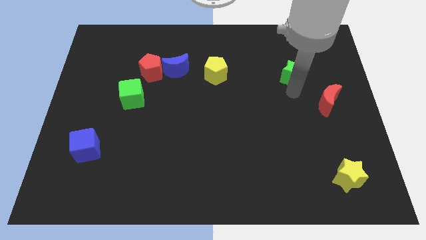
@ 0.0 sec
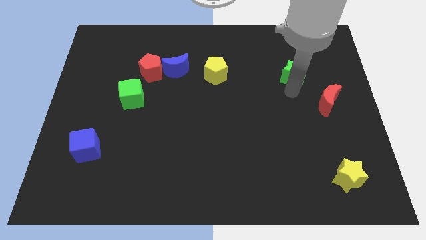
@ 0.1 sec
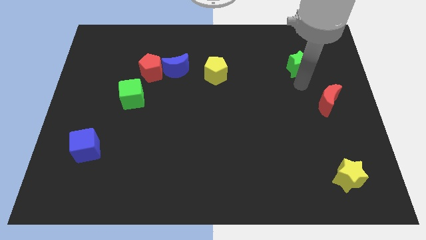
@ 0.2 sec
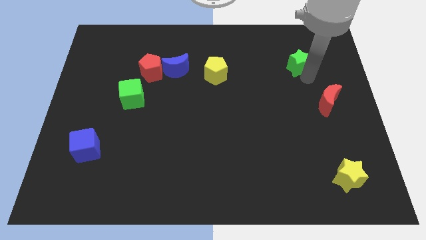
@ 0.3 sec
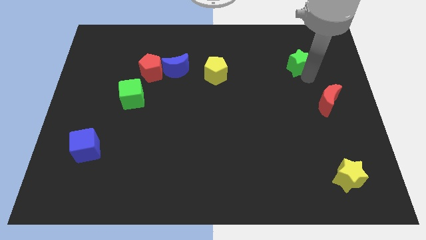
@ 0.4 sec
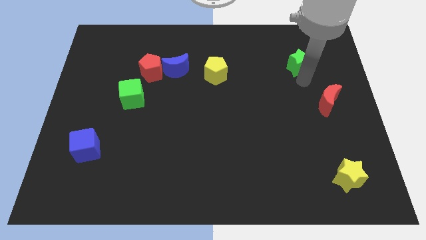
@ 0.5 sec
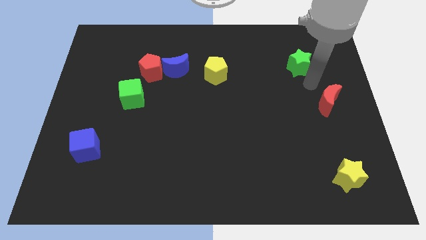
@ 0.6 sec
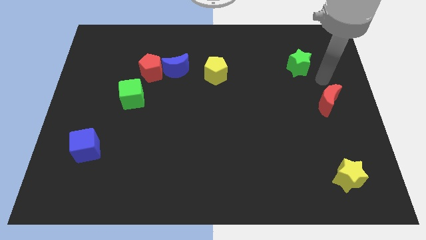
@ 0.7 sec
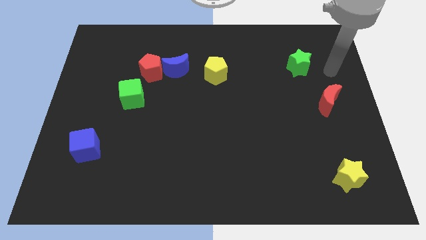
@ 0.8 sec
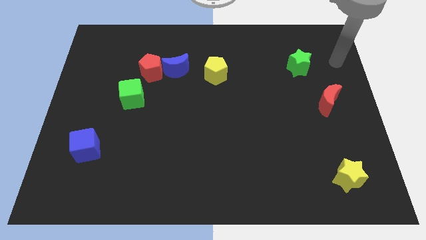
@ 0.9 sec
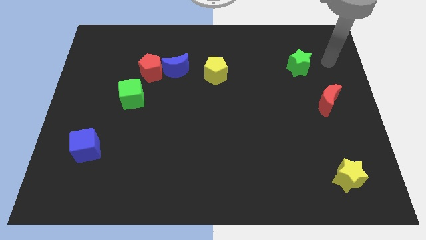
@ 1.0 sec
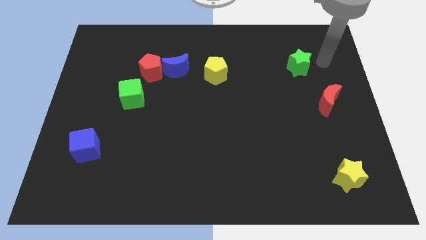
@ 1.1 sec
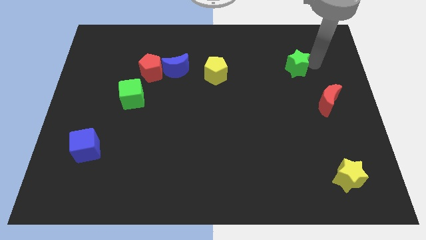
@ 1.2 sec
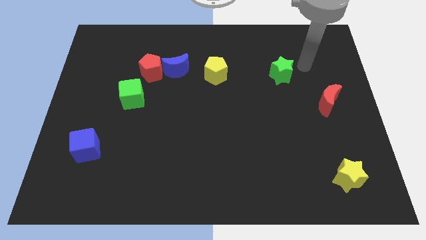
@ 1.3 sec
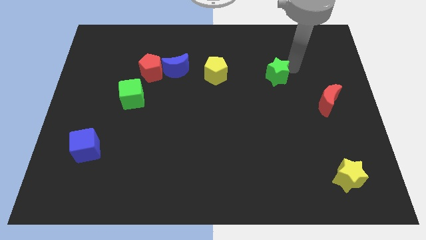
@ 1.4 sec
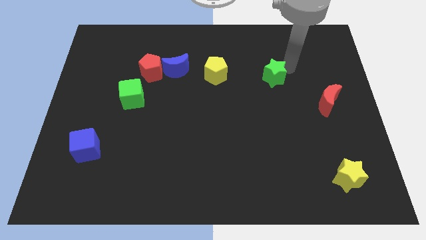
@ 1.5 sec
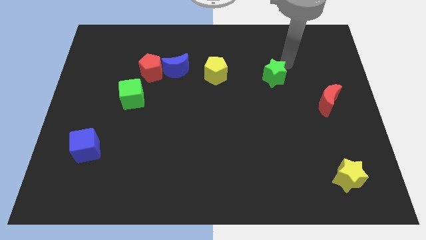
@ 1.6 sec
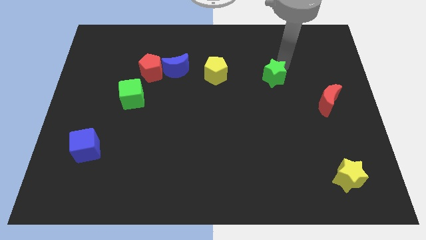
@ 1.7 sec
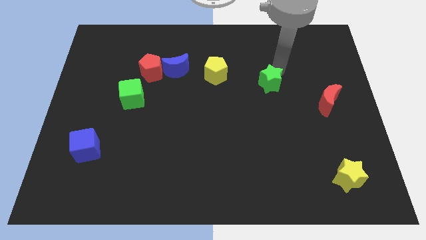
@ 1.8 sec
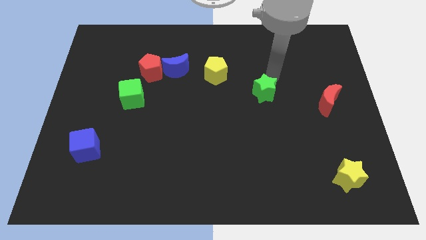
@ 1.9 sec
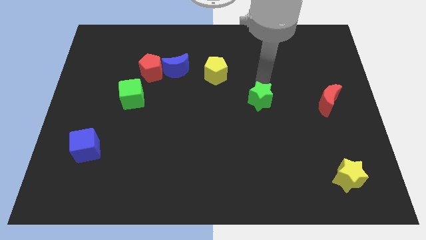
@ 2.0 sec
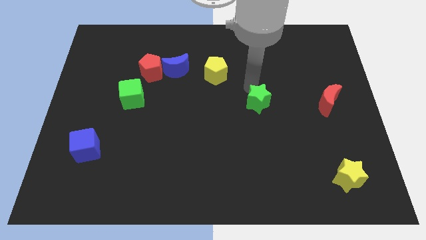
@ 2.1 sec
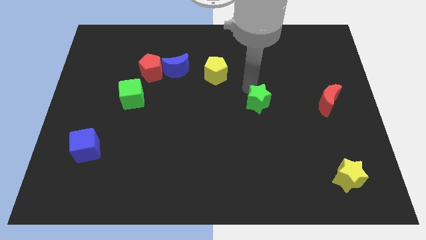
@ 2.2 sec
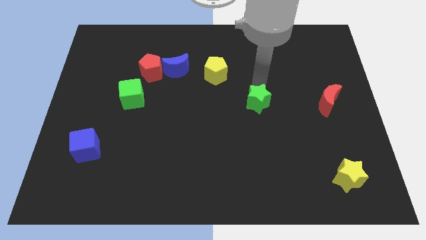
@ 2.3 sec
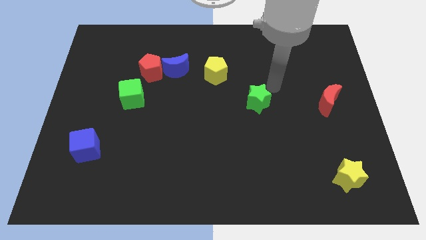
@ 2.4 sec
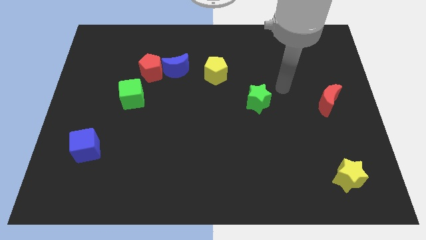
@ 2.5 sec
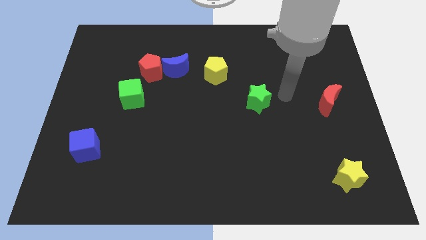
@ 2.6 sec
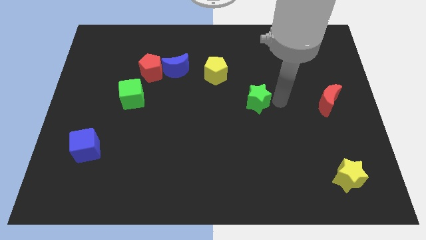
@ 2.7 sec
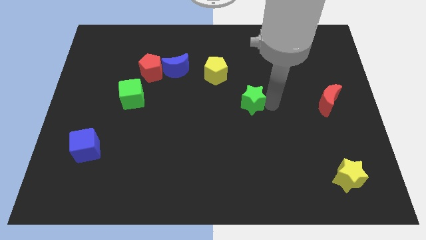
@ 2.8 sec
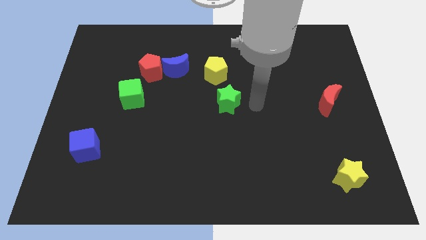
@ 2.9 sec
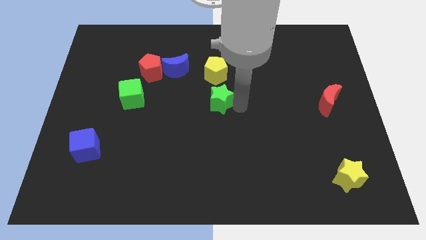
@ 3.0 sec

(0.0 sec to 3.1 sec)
place green star below yellow pentagon

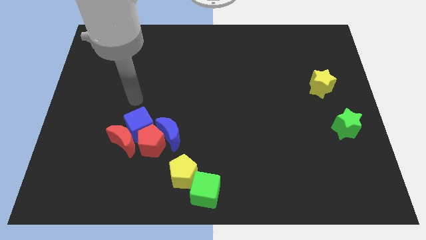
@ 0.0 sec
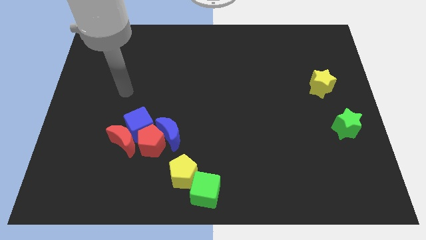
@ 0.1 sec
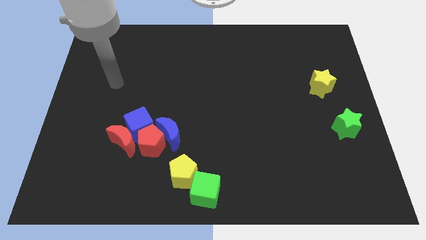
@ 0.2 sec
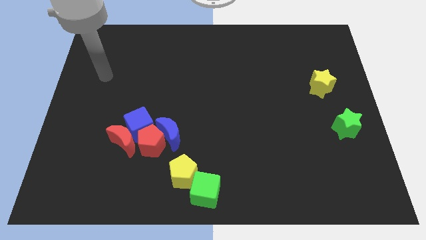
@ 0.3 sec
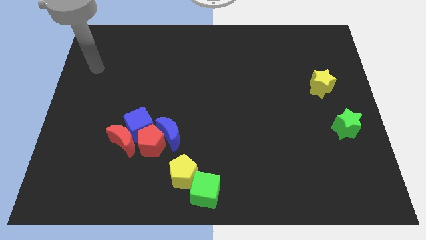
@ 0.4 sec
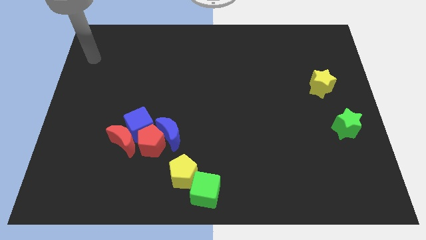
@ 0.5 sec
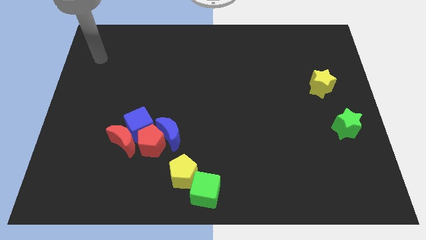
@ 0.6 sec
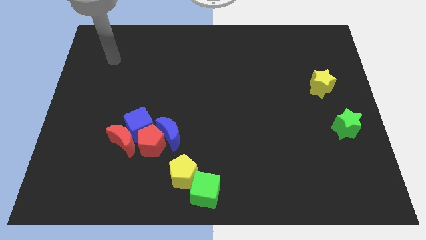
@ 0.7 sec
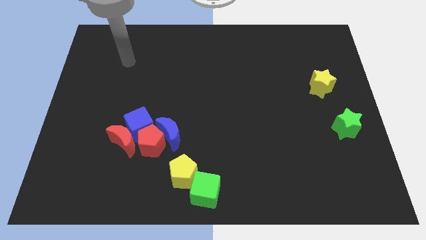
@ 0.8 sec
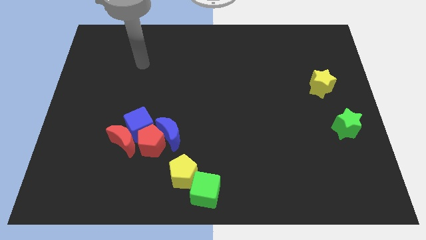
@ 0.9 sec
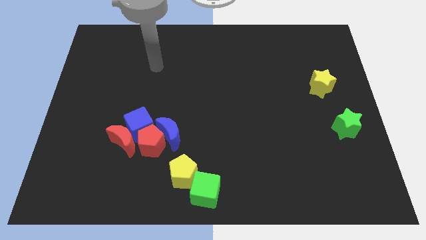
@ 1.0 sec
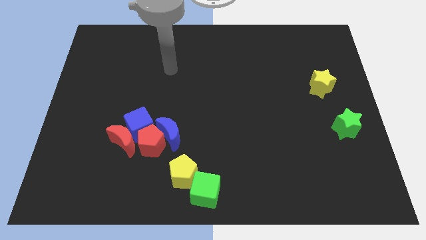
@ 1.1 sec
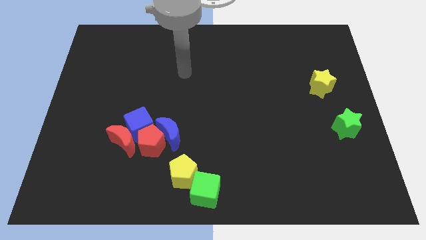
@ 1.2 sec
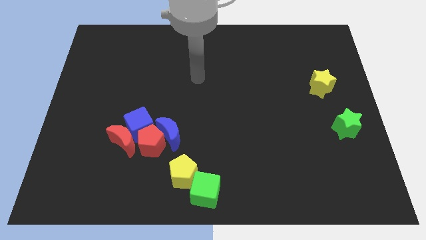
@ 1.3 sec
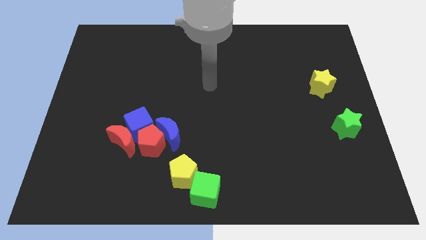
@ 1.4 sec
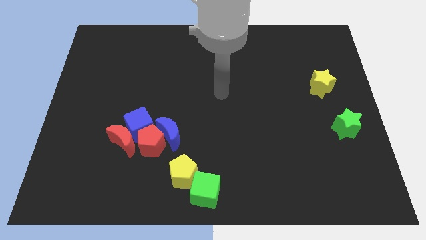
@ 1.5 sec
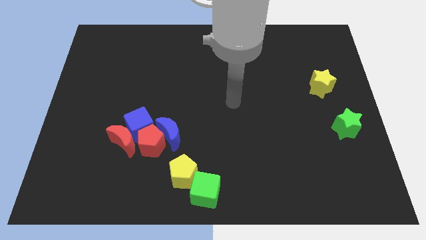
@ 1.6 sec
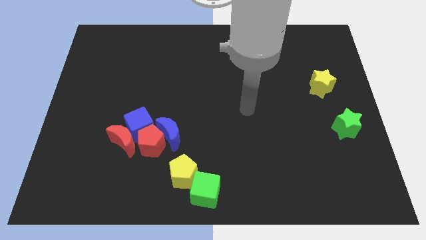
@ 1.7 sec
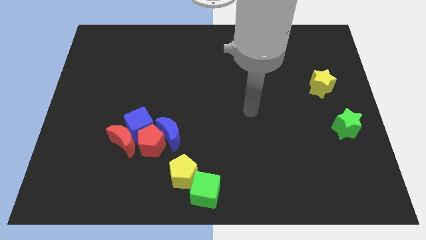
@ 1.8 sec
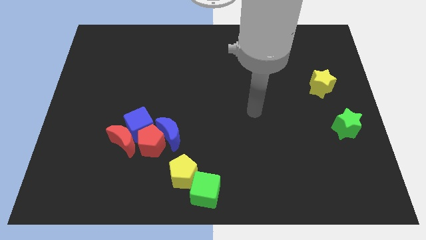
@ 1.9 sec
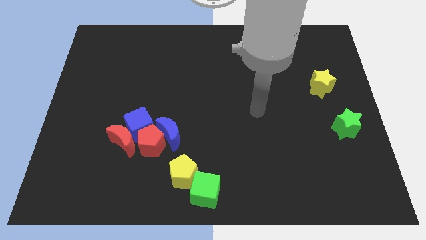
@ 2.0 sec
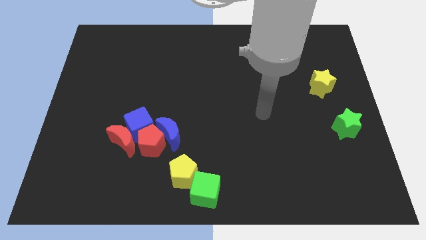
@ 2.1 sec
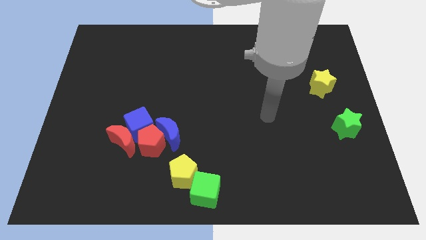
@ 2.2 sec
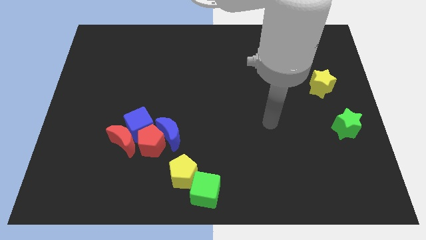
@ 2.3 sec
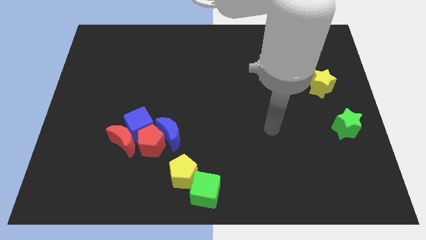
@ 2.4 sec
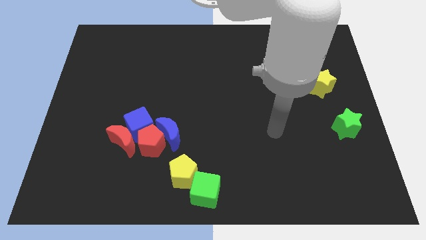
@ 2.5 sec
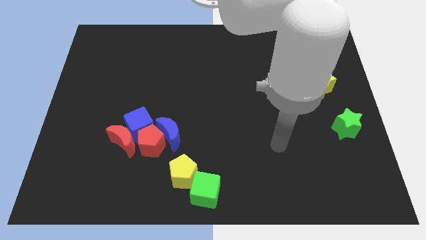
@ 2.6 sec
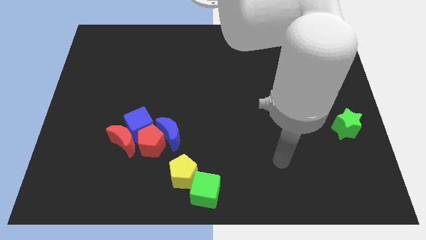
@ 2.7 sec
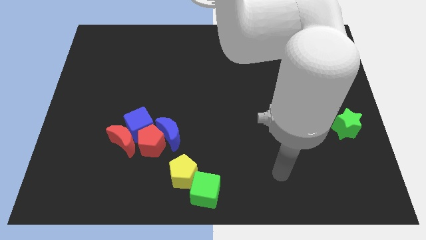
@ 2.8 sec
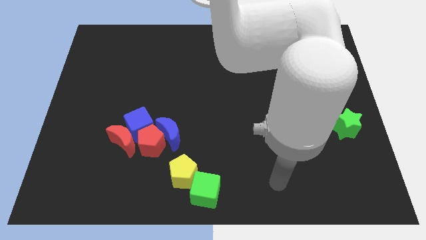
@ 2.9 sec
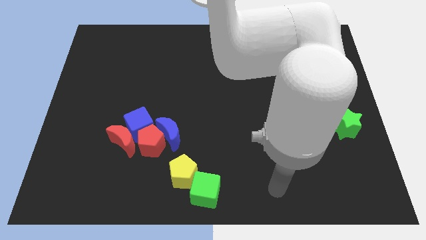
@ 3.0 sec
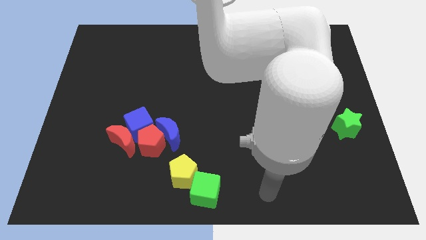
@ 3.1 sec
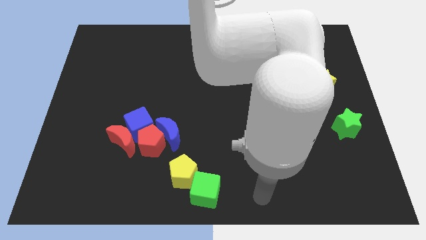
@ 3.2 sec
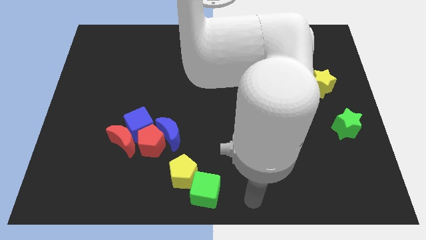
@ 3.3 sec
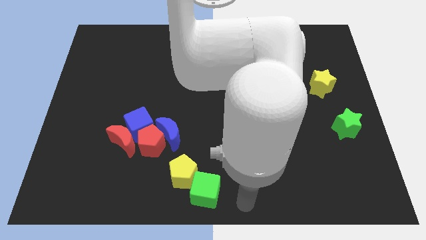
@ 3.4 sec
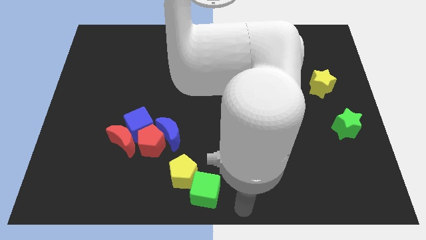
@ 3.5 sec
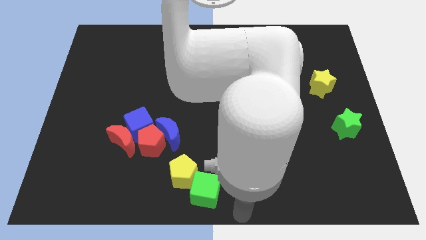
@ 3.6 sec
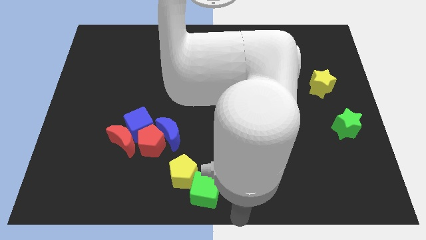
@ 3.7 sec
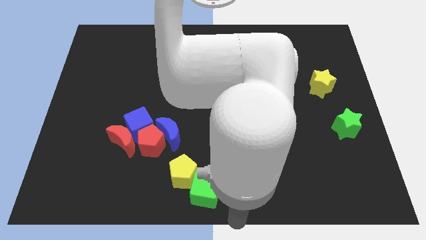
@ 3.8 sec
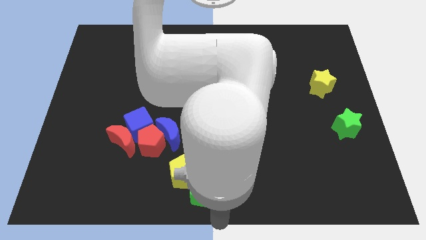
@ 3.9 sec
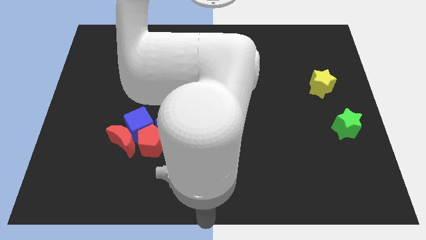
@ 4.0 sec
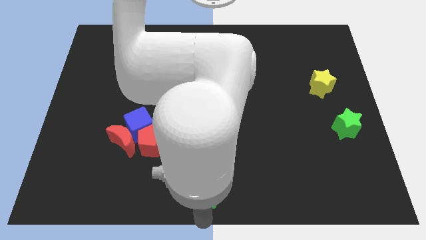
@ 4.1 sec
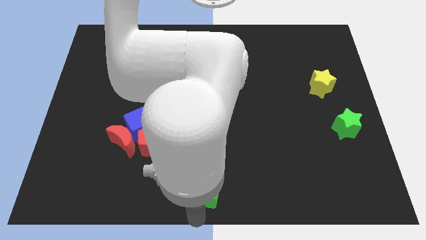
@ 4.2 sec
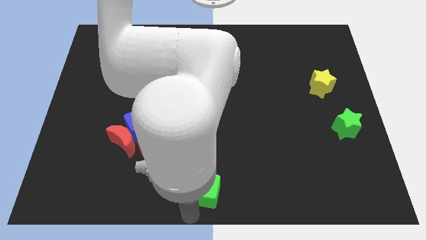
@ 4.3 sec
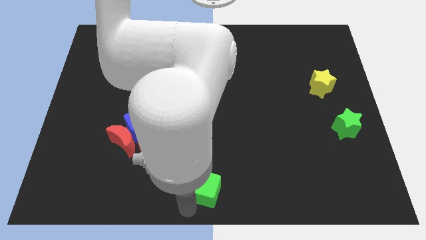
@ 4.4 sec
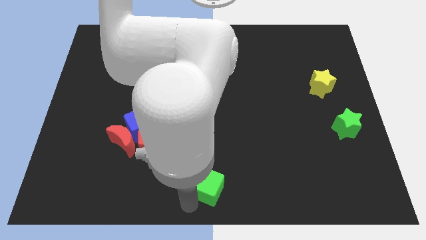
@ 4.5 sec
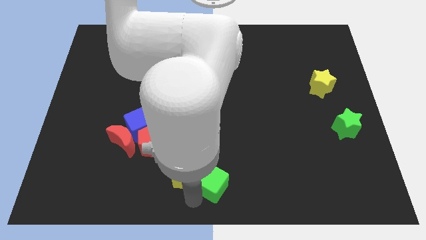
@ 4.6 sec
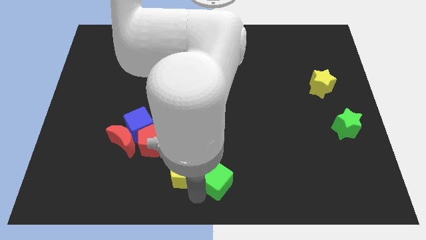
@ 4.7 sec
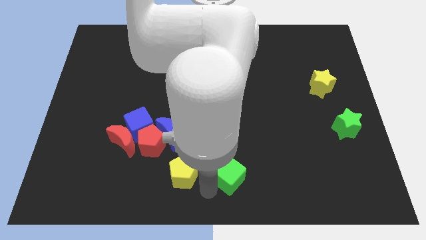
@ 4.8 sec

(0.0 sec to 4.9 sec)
push the green cube to the right of the yellow pentagon

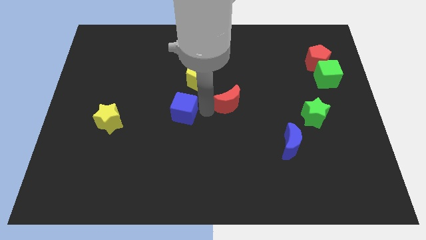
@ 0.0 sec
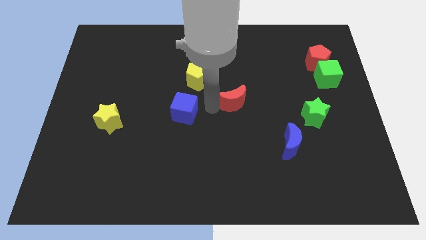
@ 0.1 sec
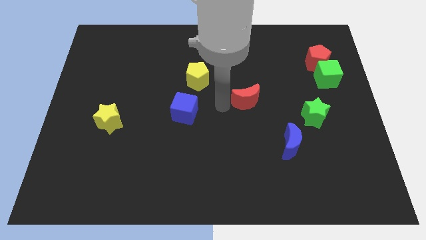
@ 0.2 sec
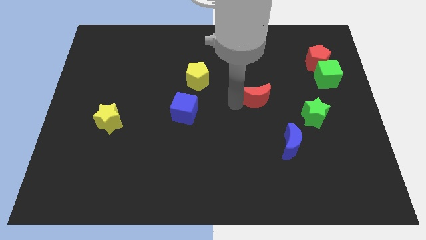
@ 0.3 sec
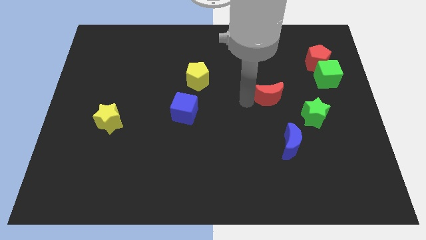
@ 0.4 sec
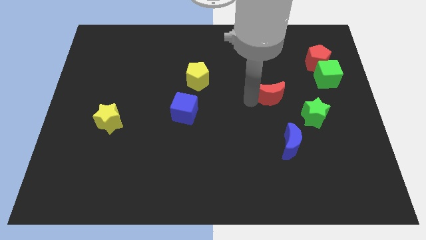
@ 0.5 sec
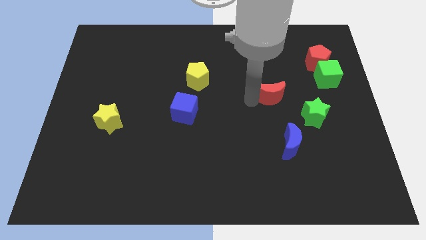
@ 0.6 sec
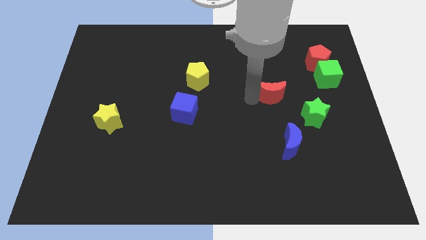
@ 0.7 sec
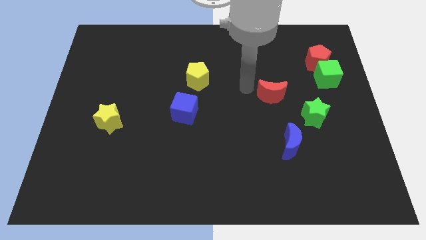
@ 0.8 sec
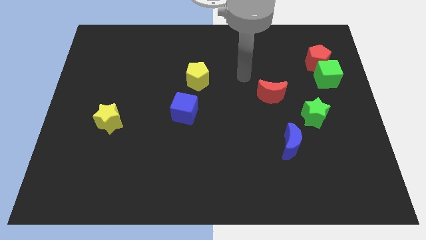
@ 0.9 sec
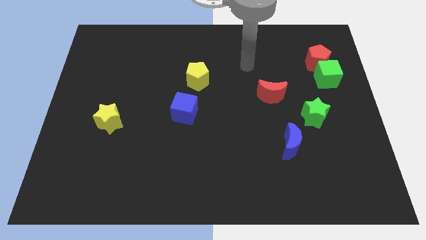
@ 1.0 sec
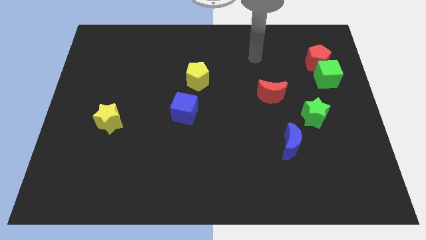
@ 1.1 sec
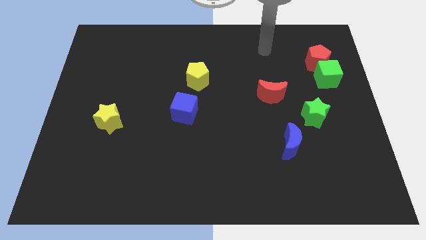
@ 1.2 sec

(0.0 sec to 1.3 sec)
move the red crescent to the right of the board
